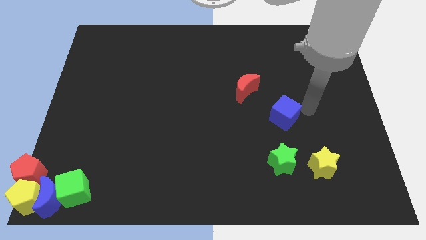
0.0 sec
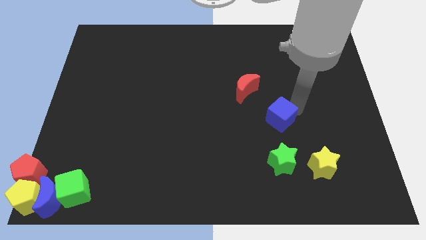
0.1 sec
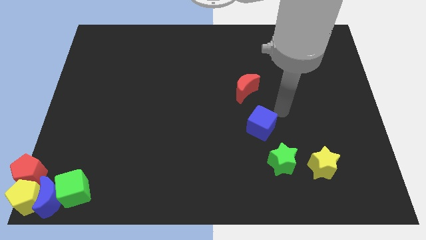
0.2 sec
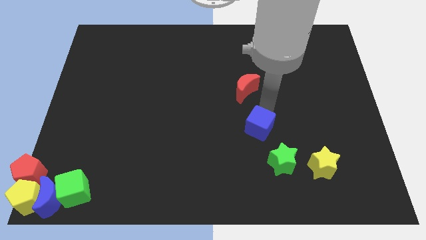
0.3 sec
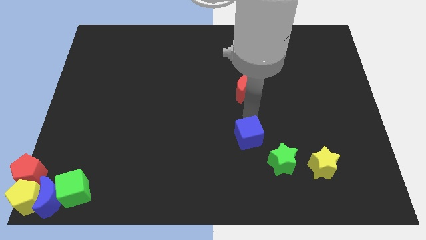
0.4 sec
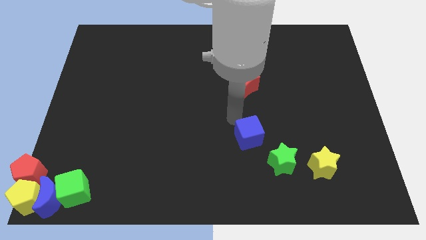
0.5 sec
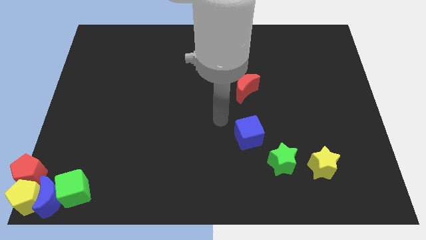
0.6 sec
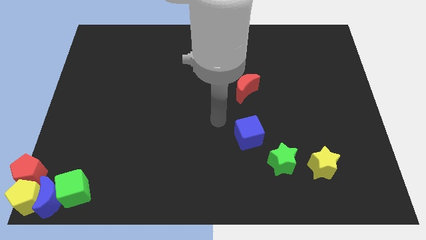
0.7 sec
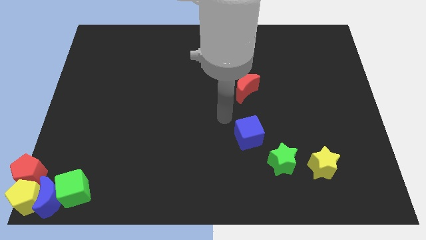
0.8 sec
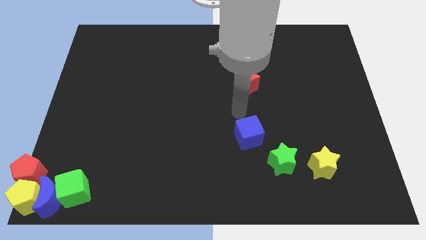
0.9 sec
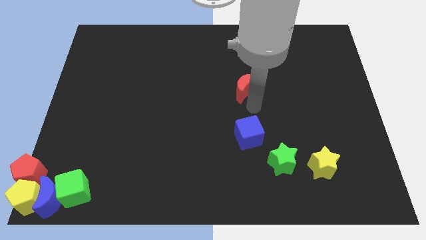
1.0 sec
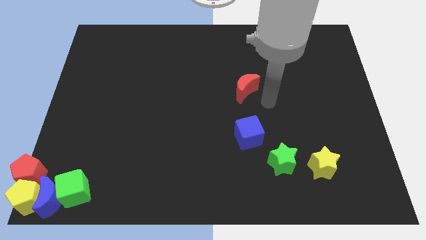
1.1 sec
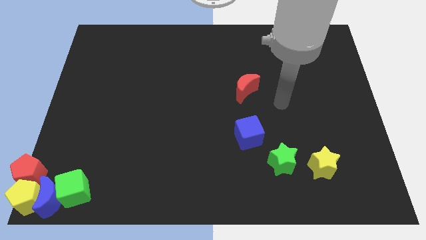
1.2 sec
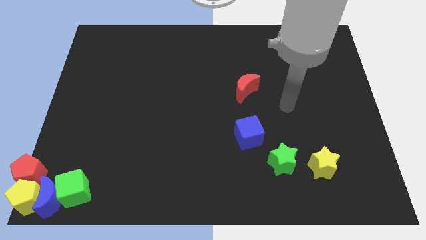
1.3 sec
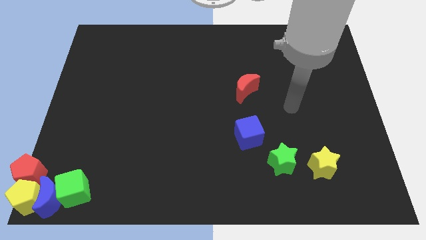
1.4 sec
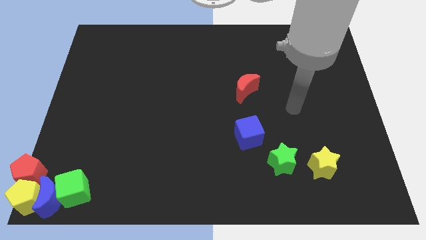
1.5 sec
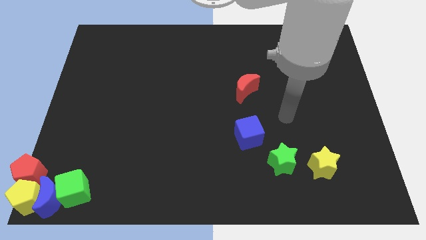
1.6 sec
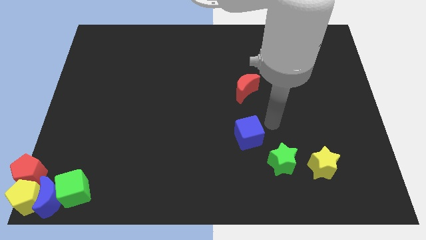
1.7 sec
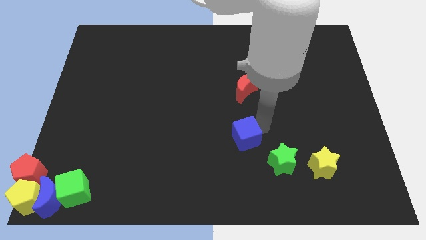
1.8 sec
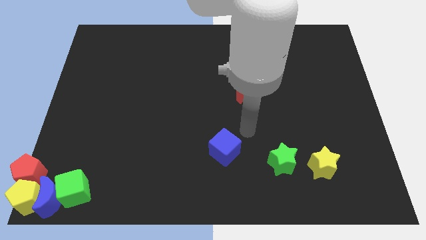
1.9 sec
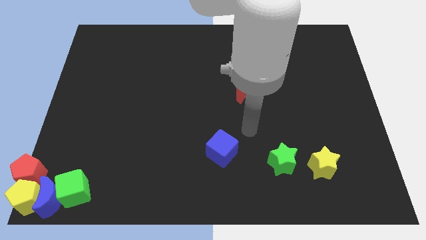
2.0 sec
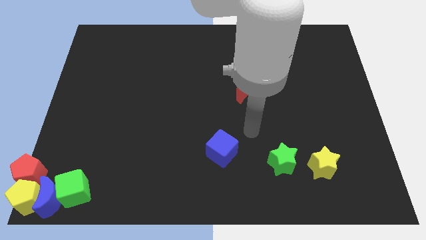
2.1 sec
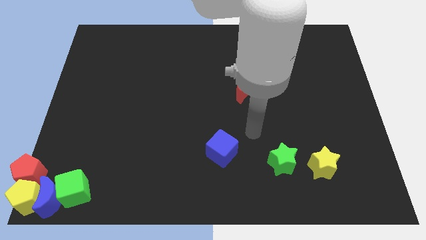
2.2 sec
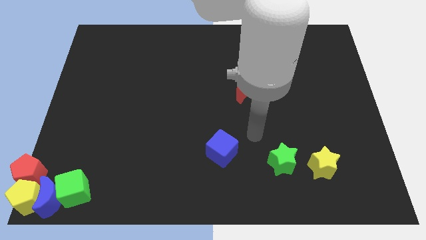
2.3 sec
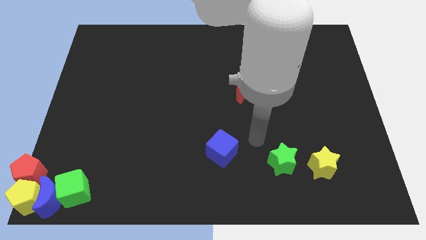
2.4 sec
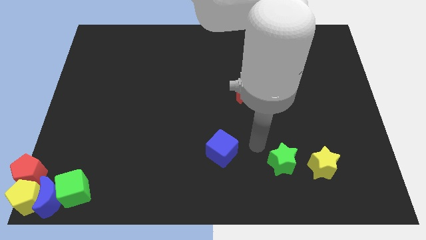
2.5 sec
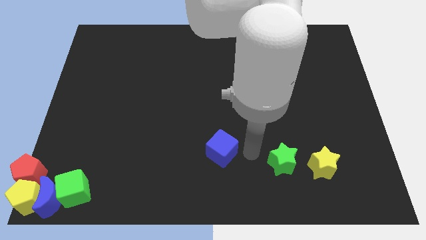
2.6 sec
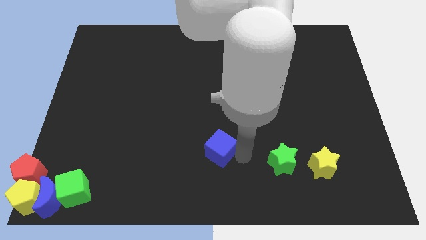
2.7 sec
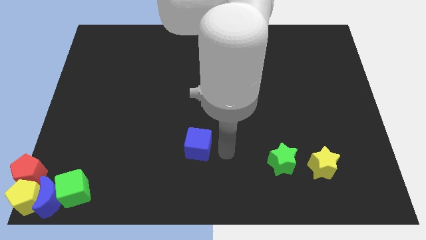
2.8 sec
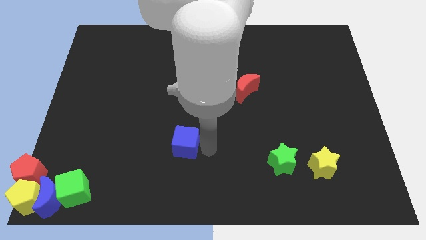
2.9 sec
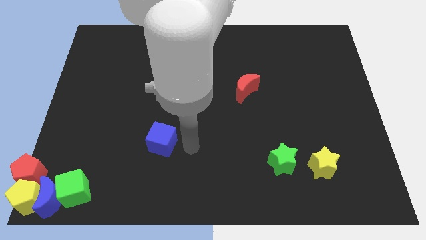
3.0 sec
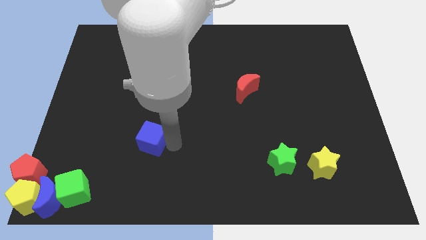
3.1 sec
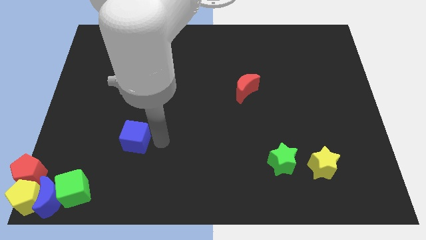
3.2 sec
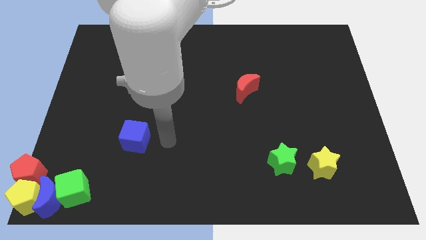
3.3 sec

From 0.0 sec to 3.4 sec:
push blue cube towards bottom left

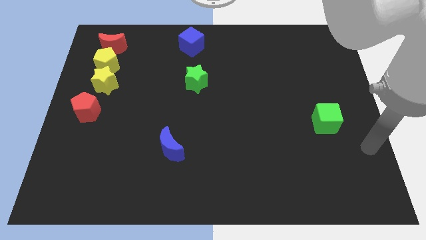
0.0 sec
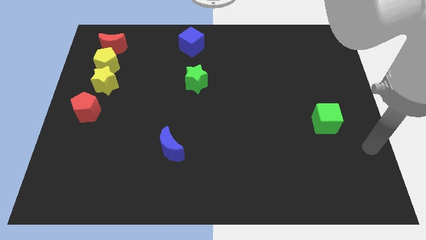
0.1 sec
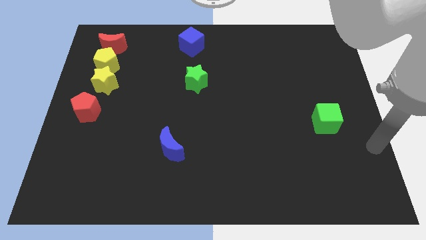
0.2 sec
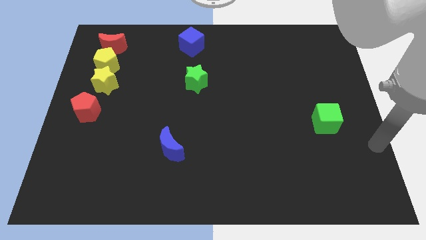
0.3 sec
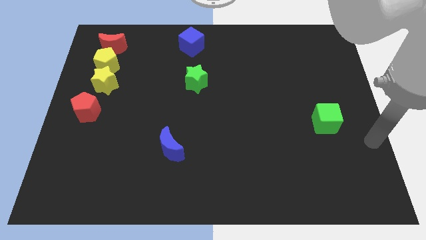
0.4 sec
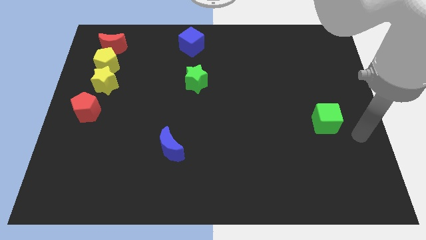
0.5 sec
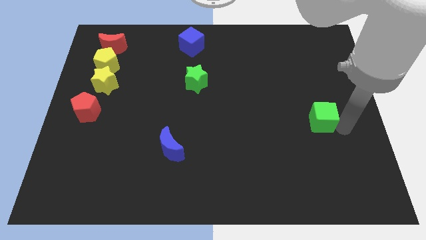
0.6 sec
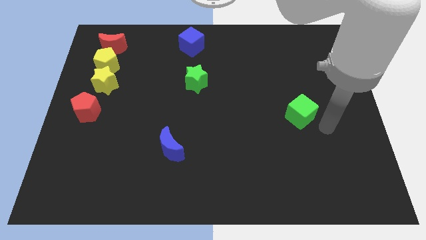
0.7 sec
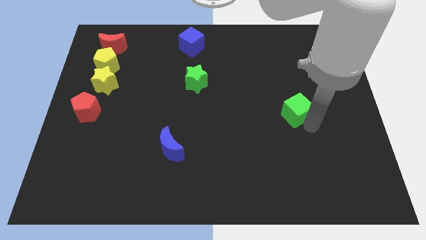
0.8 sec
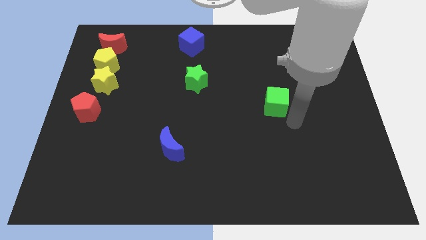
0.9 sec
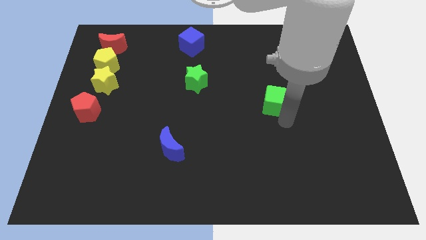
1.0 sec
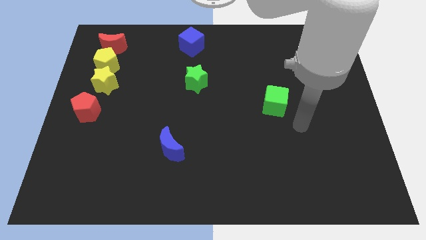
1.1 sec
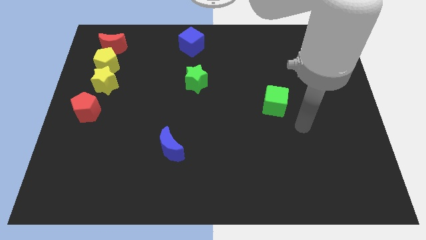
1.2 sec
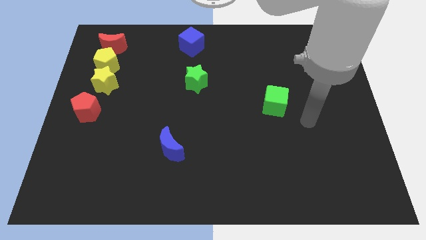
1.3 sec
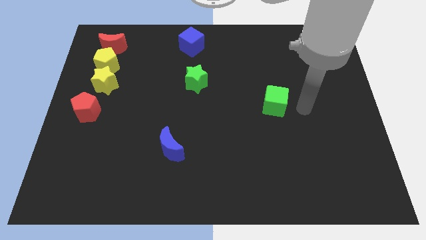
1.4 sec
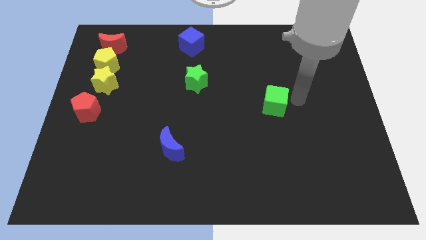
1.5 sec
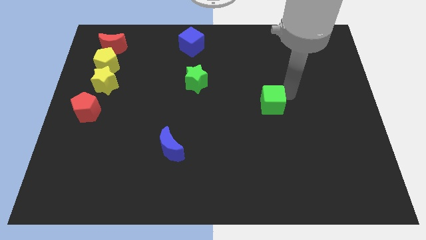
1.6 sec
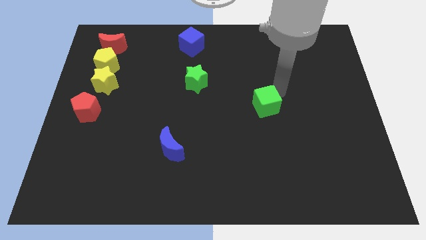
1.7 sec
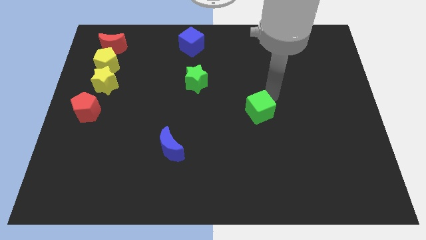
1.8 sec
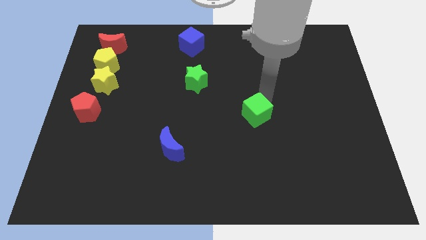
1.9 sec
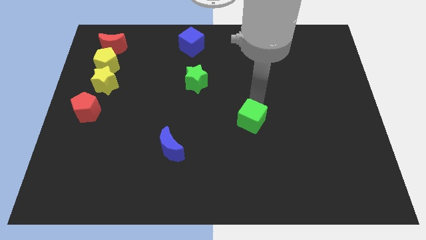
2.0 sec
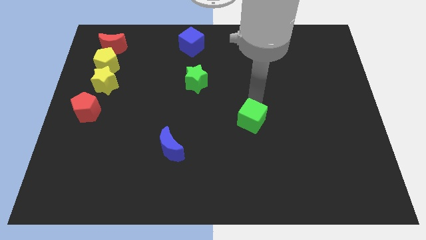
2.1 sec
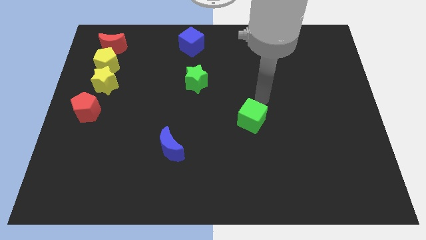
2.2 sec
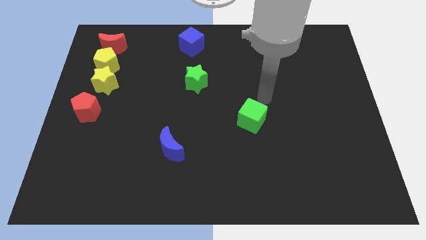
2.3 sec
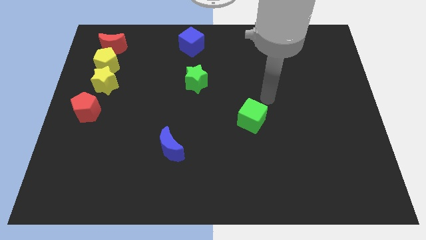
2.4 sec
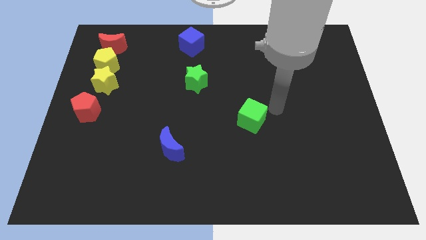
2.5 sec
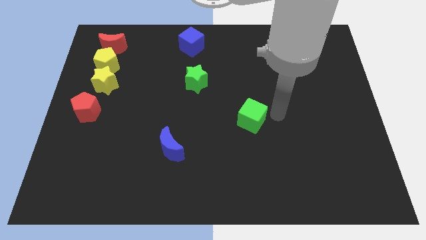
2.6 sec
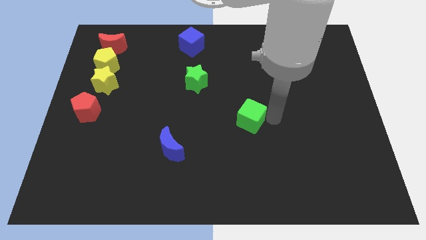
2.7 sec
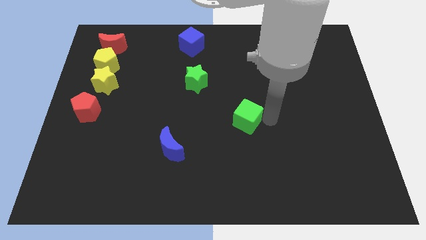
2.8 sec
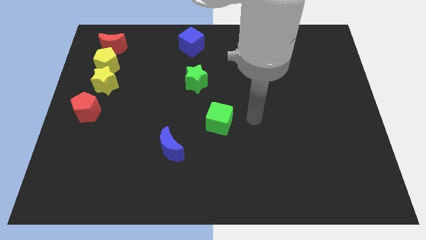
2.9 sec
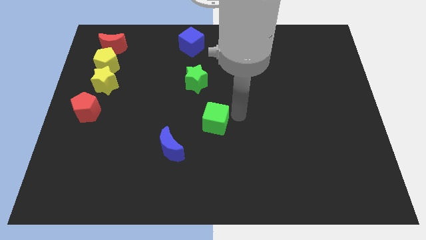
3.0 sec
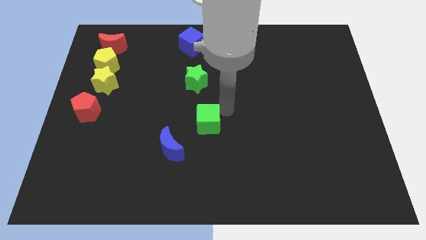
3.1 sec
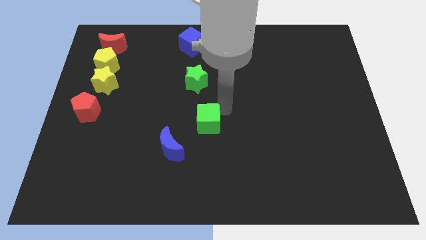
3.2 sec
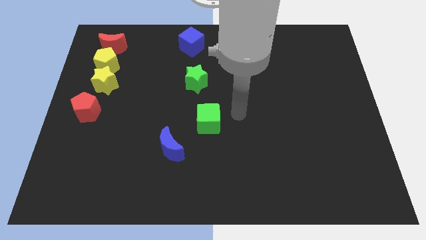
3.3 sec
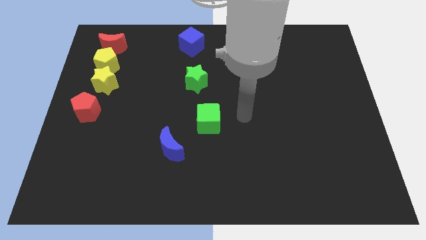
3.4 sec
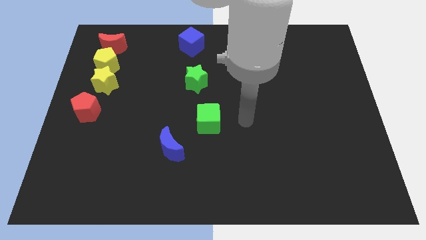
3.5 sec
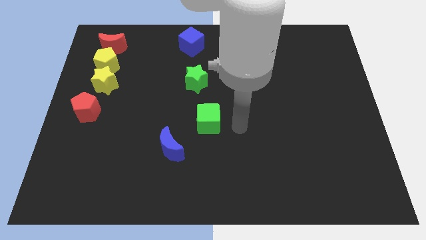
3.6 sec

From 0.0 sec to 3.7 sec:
move the green cube between green star and blue moon

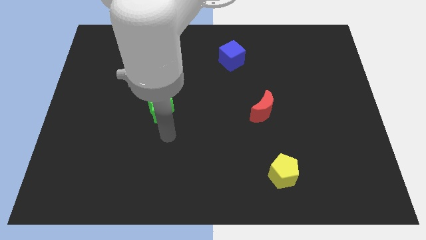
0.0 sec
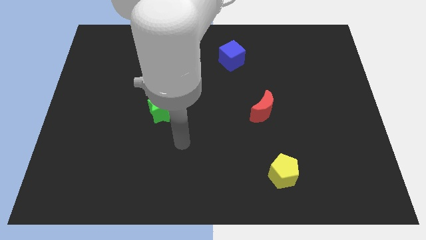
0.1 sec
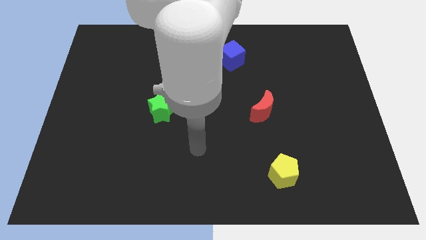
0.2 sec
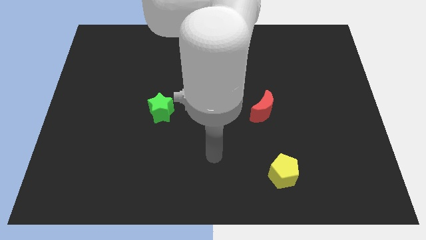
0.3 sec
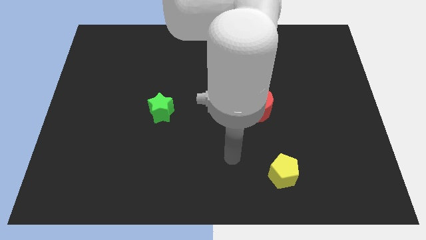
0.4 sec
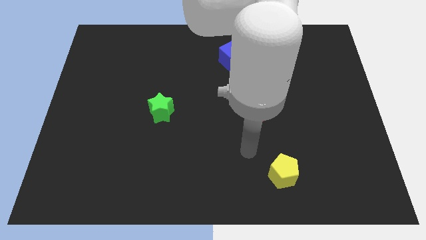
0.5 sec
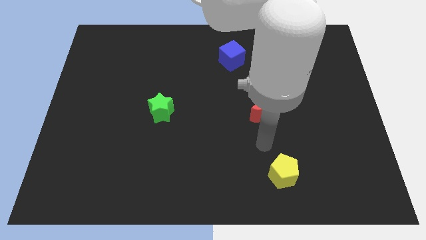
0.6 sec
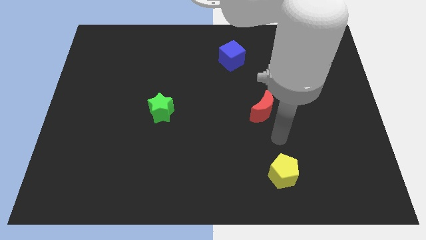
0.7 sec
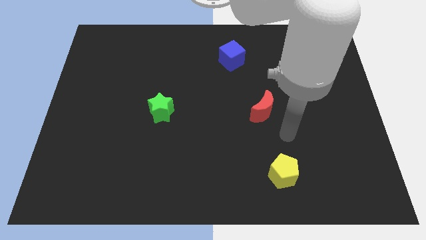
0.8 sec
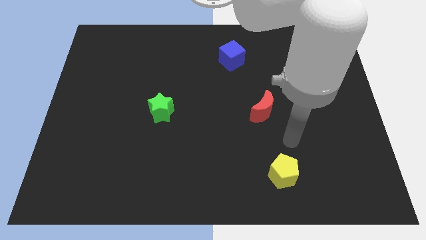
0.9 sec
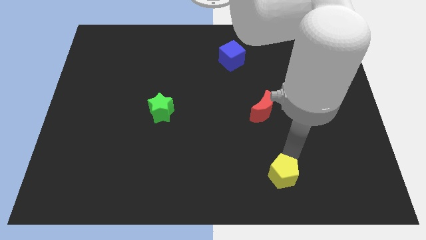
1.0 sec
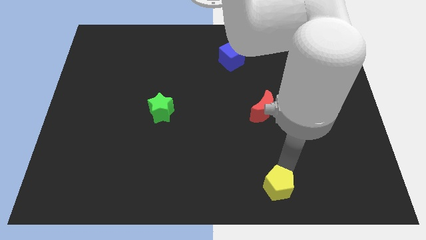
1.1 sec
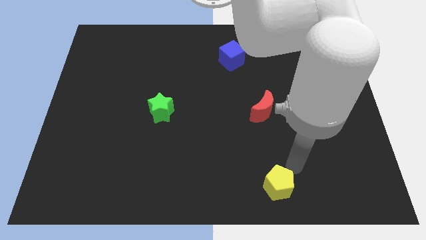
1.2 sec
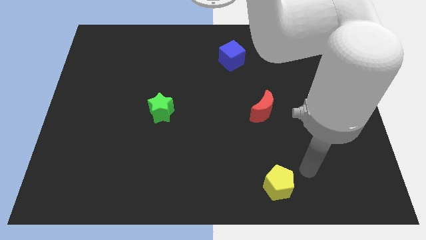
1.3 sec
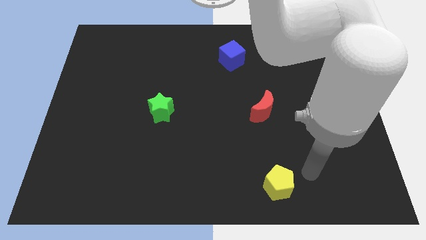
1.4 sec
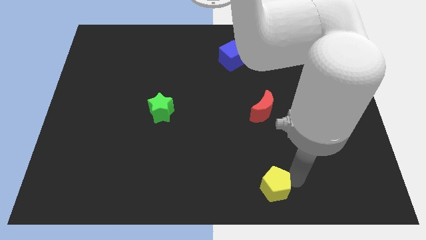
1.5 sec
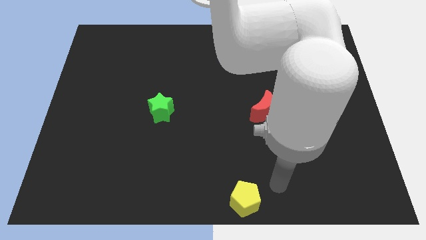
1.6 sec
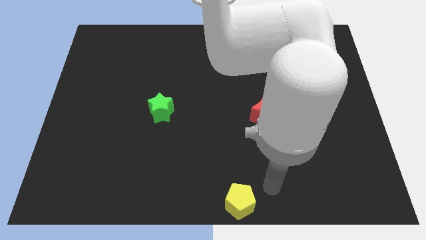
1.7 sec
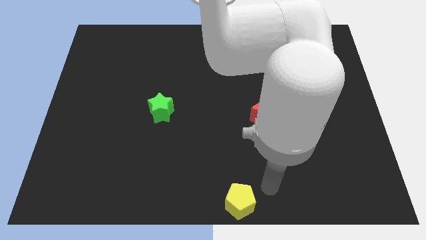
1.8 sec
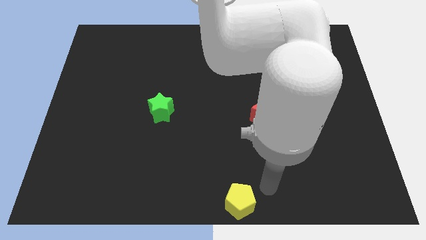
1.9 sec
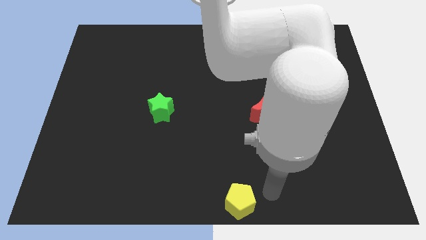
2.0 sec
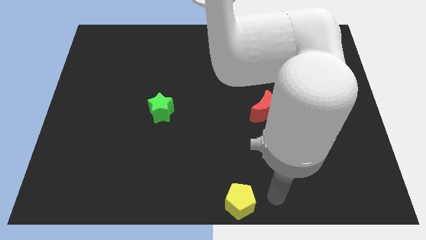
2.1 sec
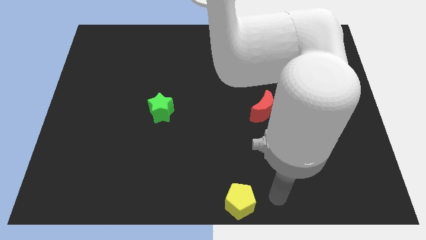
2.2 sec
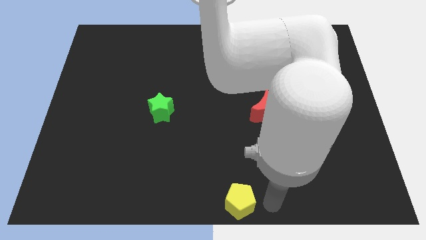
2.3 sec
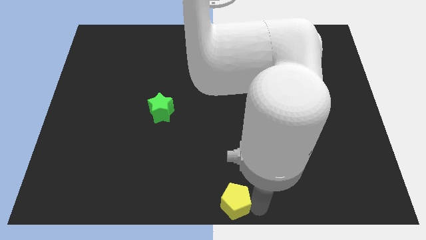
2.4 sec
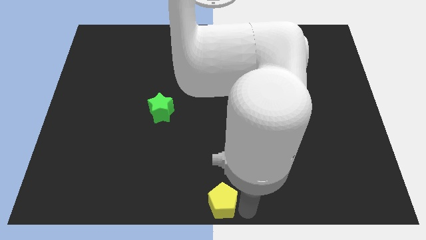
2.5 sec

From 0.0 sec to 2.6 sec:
put the yellow pentagon at the bottom center of the board
